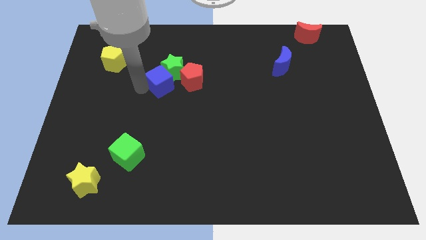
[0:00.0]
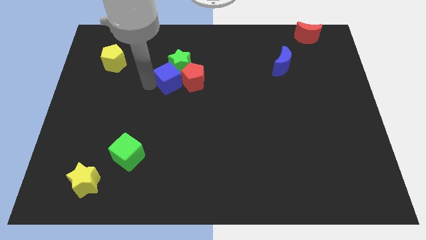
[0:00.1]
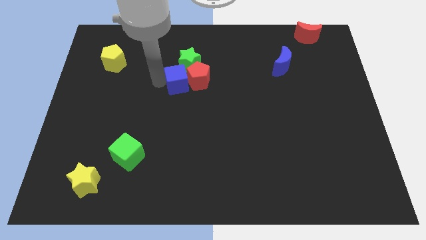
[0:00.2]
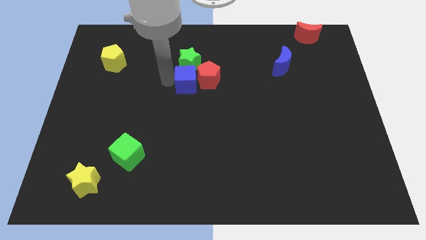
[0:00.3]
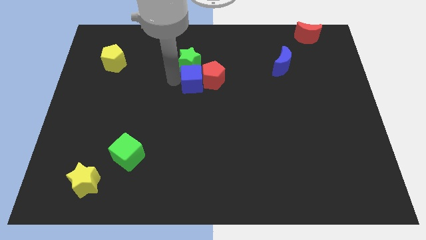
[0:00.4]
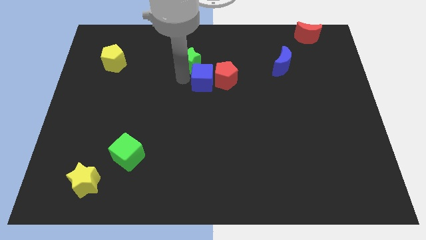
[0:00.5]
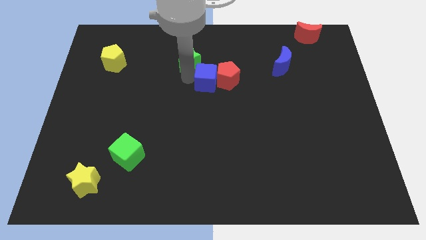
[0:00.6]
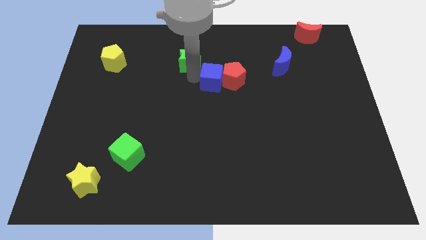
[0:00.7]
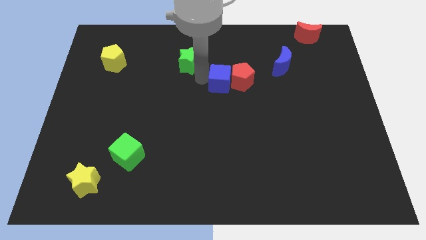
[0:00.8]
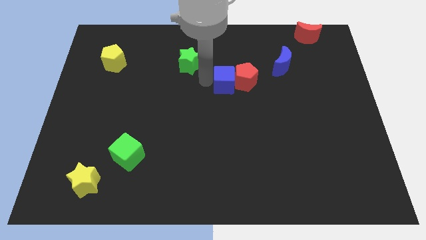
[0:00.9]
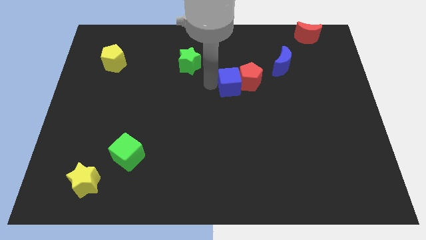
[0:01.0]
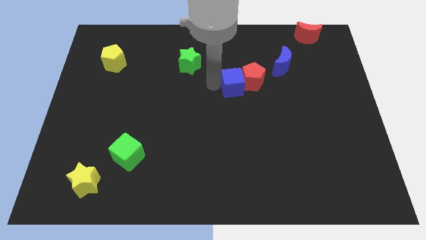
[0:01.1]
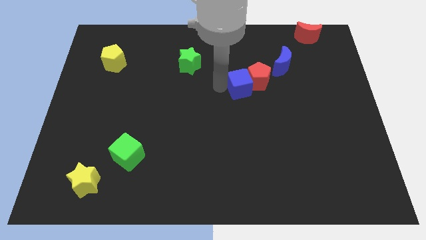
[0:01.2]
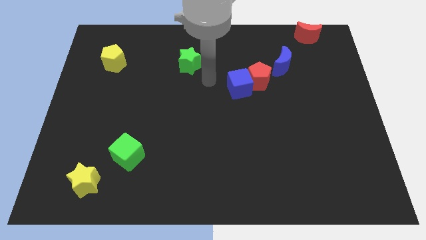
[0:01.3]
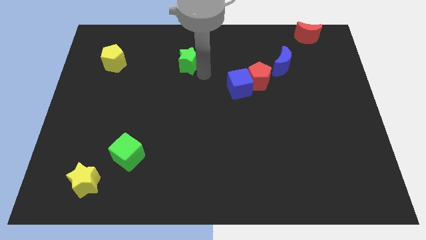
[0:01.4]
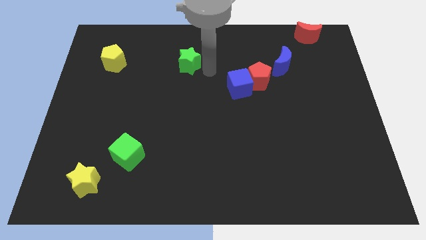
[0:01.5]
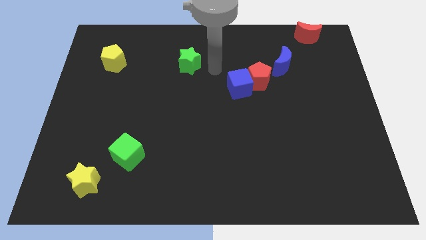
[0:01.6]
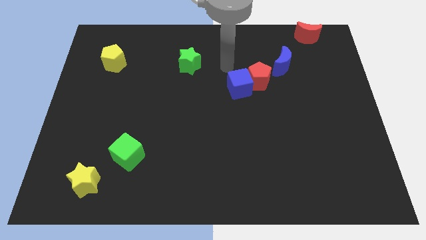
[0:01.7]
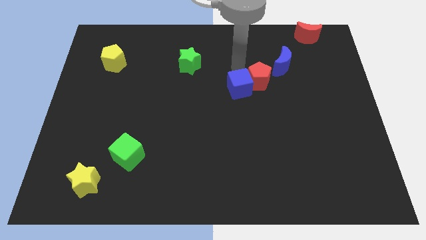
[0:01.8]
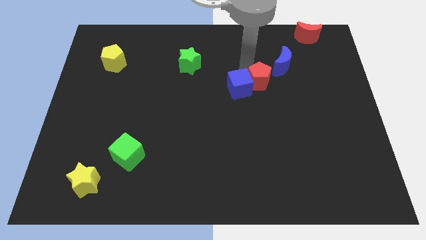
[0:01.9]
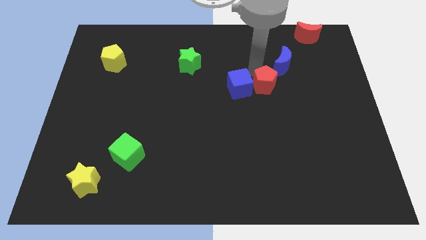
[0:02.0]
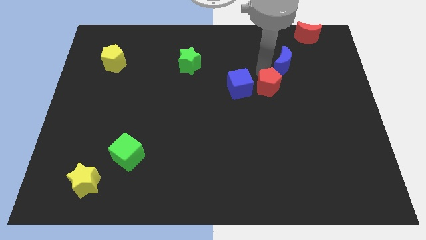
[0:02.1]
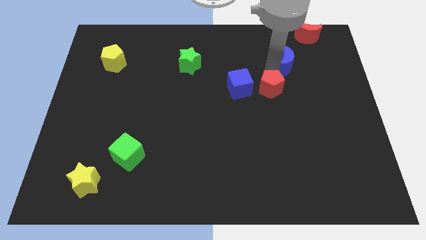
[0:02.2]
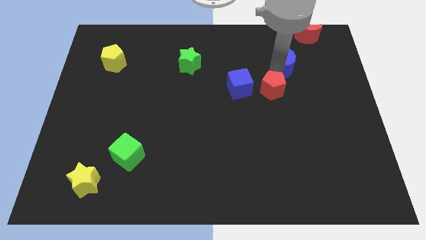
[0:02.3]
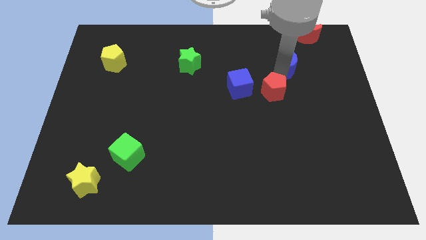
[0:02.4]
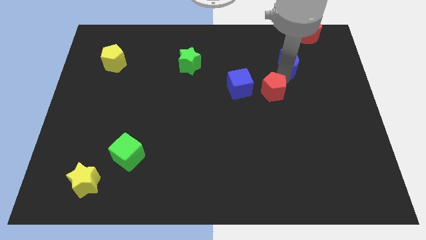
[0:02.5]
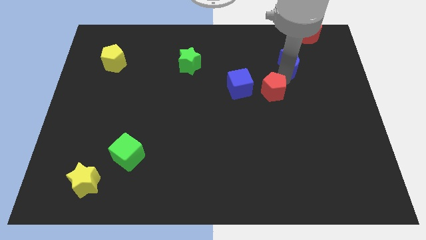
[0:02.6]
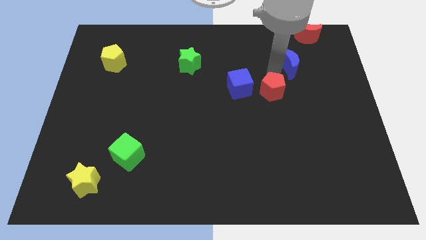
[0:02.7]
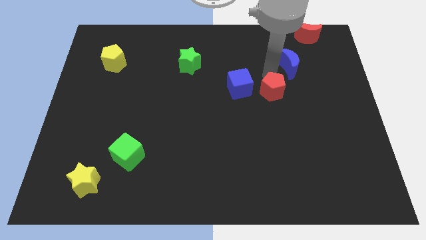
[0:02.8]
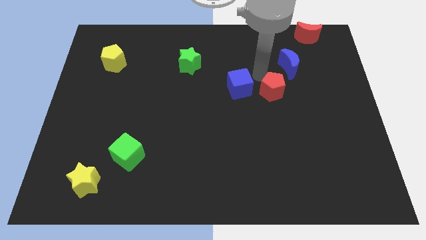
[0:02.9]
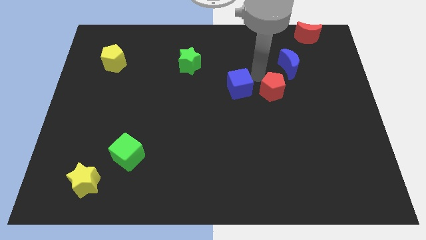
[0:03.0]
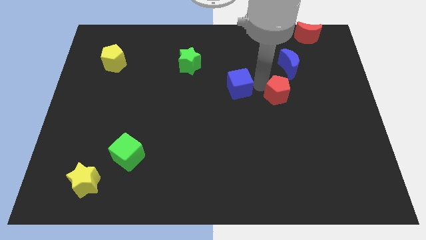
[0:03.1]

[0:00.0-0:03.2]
push the blue cube into the red pentagon

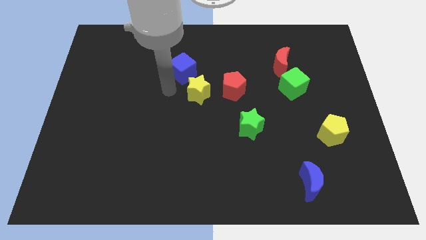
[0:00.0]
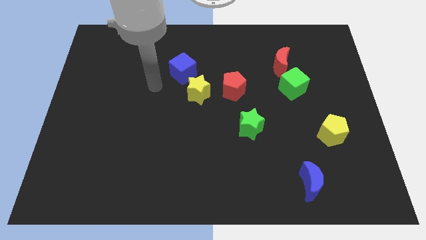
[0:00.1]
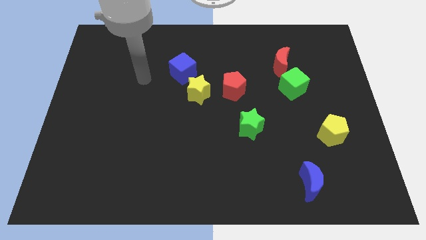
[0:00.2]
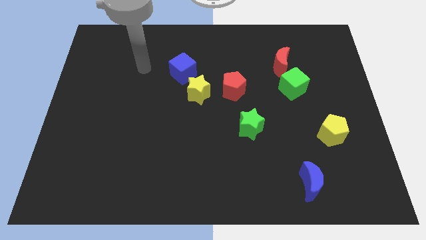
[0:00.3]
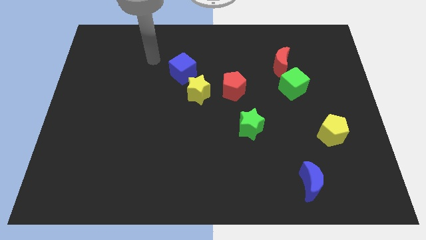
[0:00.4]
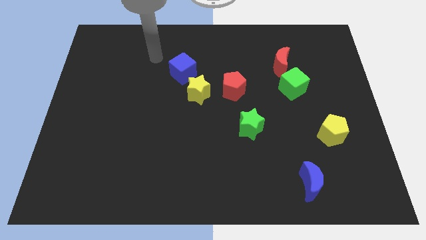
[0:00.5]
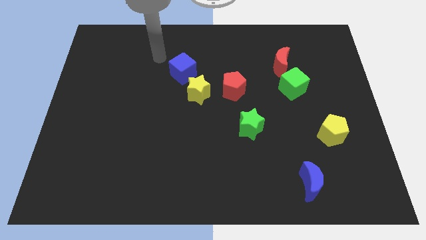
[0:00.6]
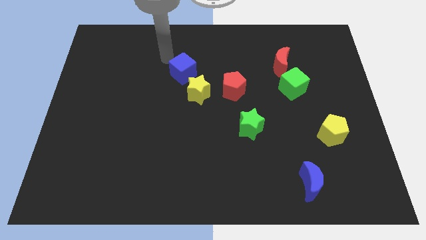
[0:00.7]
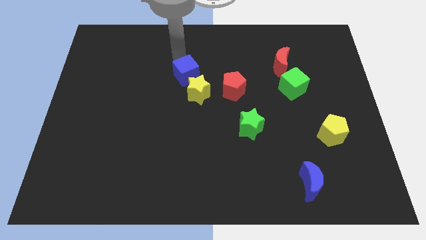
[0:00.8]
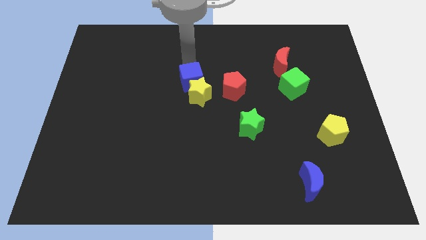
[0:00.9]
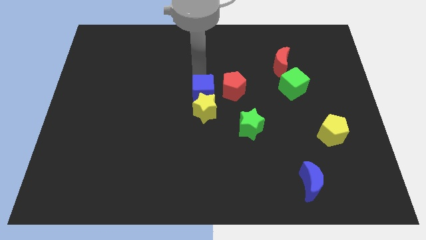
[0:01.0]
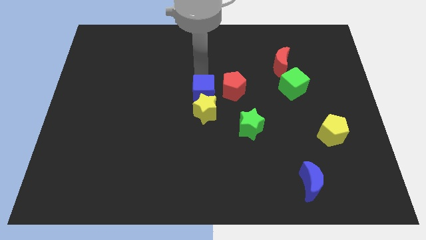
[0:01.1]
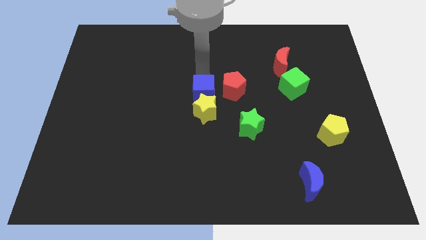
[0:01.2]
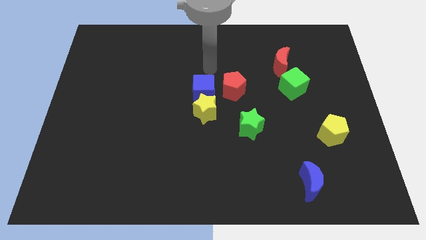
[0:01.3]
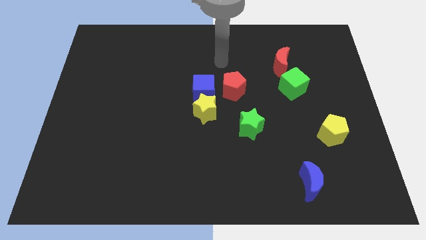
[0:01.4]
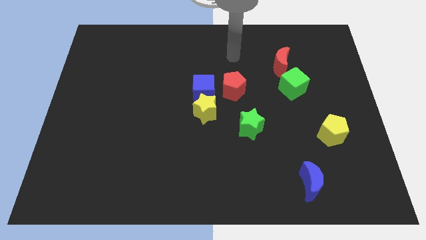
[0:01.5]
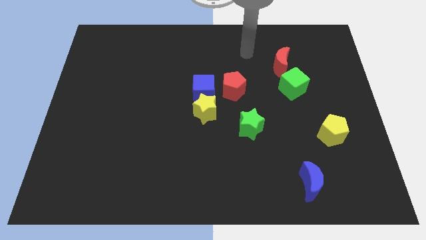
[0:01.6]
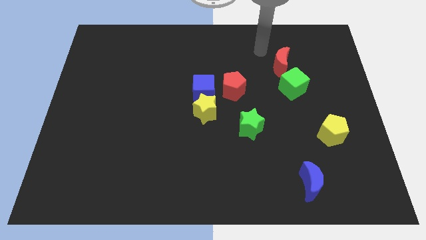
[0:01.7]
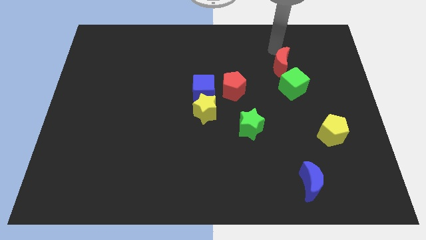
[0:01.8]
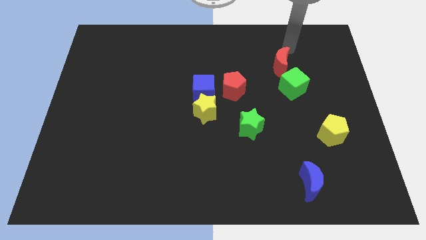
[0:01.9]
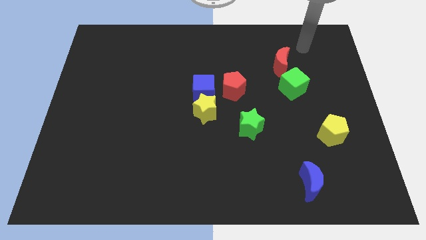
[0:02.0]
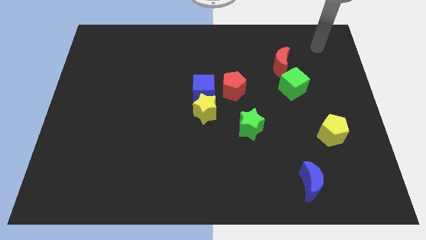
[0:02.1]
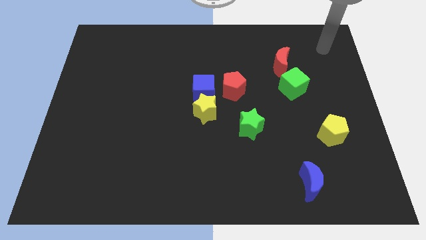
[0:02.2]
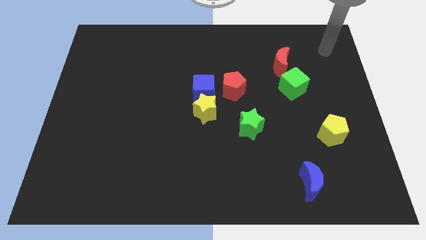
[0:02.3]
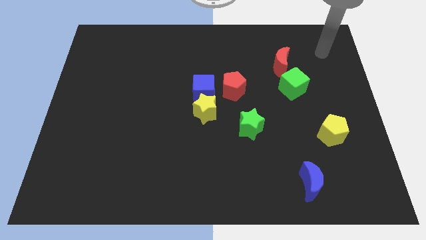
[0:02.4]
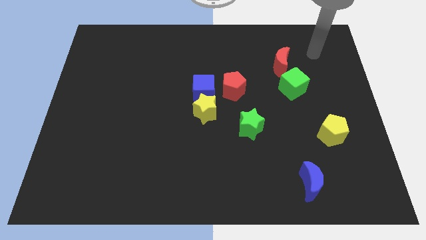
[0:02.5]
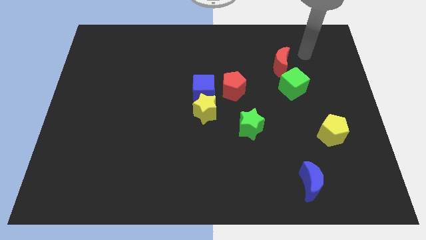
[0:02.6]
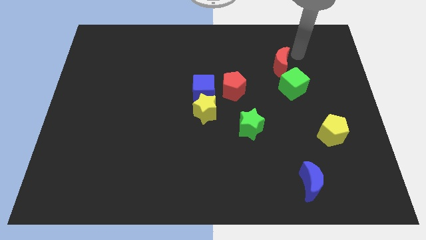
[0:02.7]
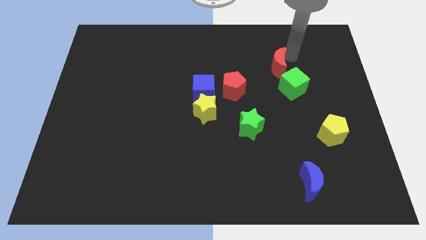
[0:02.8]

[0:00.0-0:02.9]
place the arm near the red moon

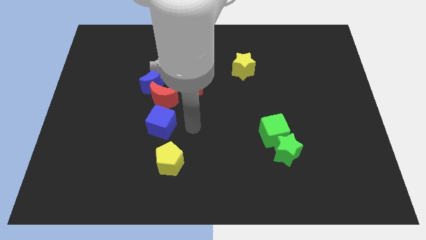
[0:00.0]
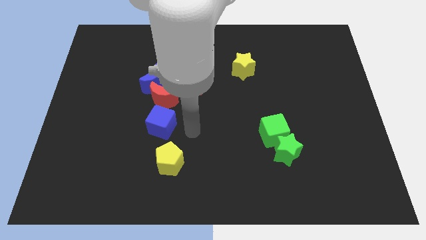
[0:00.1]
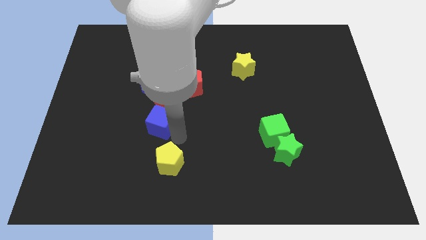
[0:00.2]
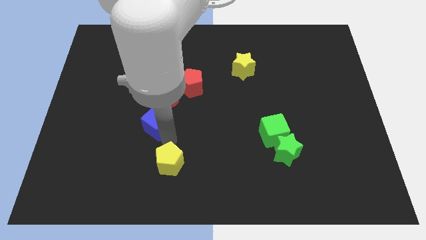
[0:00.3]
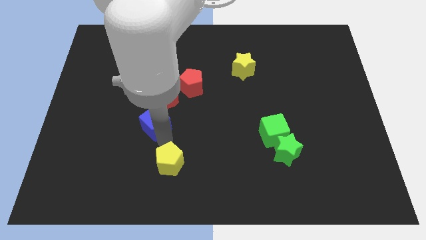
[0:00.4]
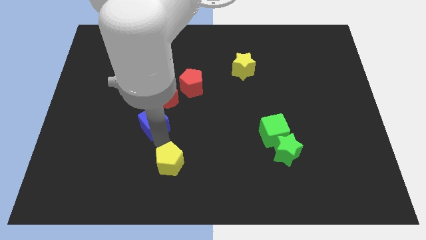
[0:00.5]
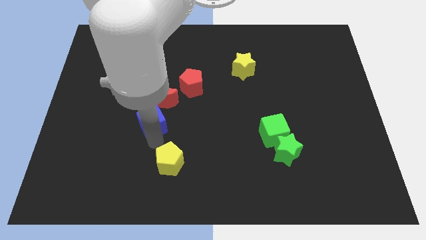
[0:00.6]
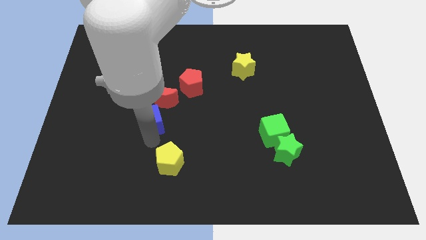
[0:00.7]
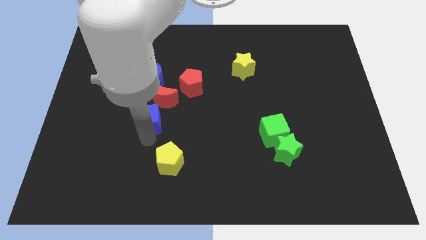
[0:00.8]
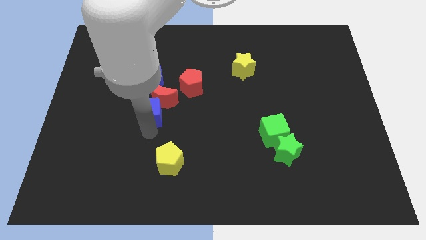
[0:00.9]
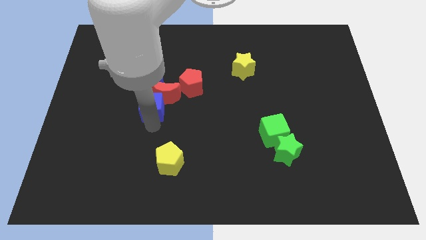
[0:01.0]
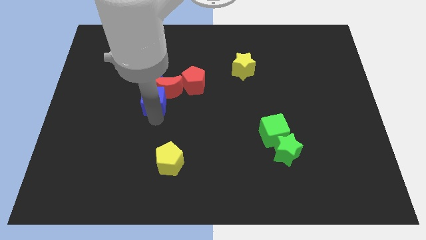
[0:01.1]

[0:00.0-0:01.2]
move blue cube into the red crescent

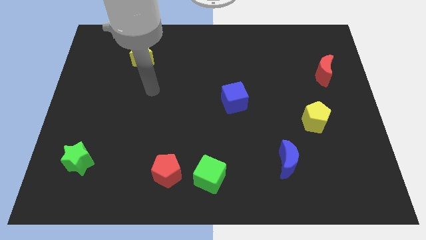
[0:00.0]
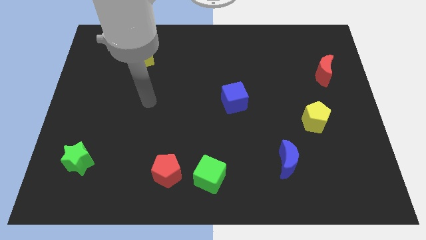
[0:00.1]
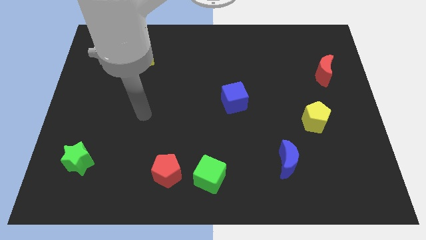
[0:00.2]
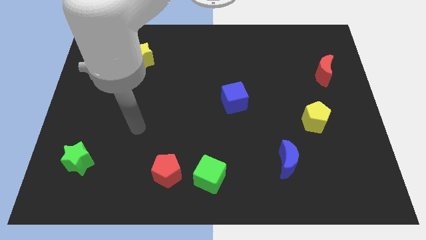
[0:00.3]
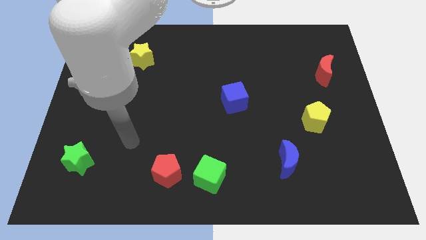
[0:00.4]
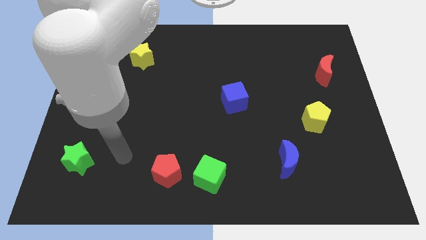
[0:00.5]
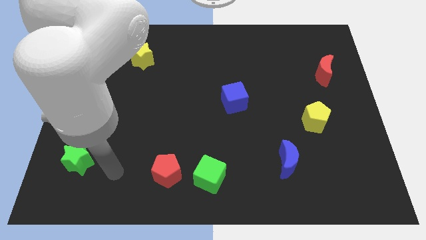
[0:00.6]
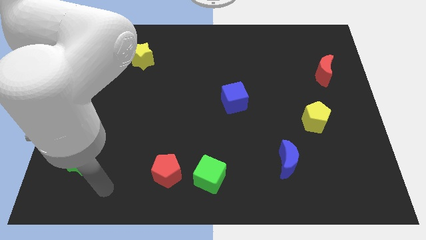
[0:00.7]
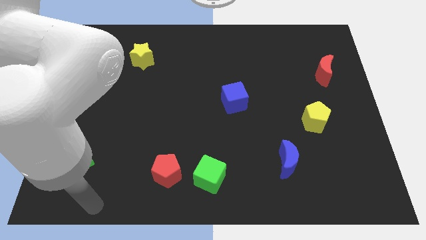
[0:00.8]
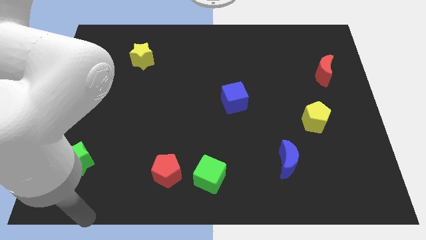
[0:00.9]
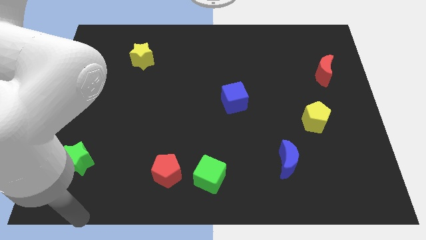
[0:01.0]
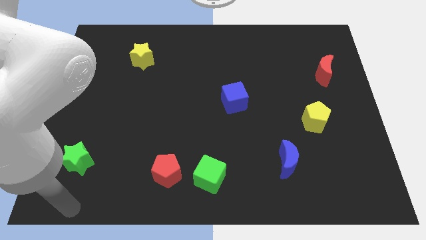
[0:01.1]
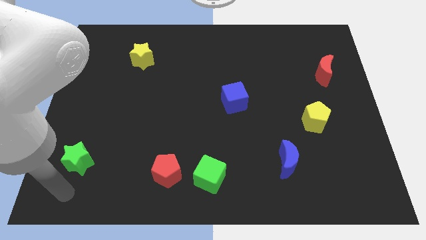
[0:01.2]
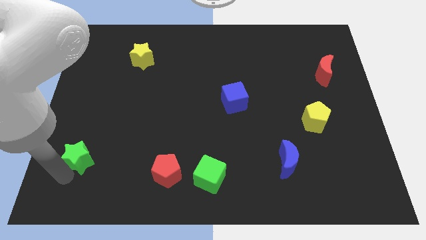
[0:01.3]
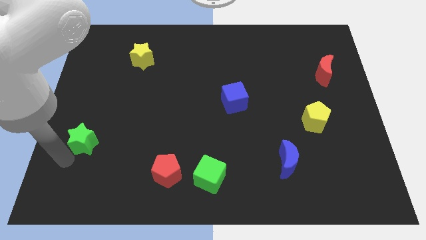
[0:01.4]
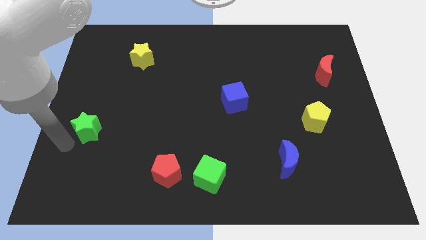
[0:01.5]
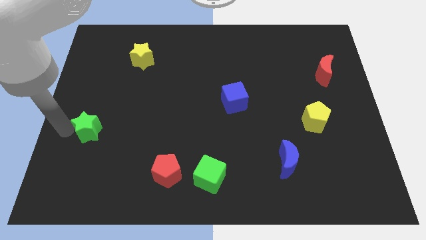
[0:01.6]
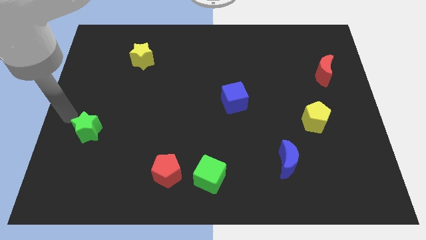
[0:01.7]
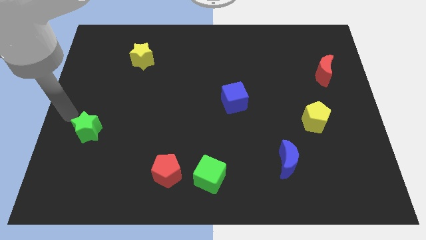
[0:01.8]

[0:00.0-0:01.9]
move the green star slightly up
